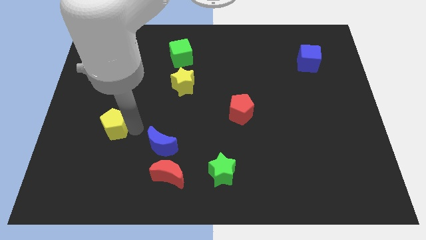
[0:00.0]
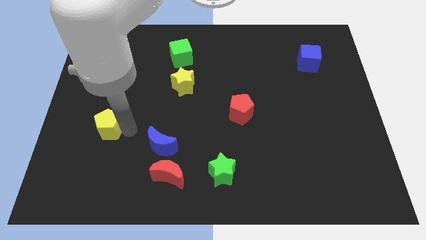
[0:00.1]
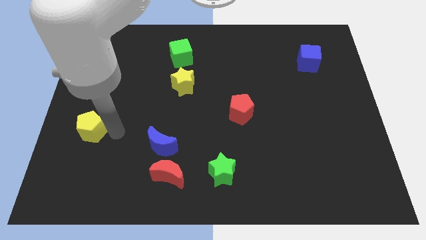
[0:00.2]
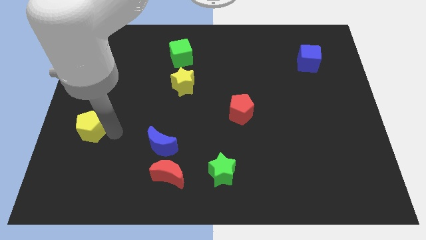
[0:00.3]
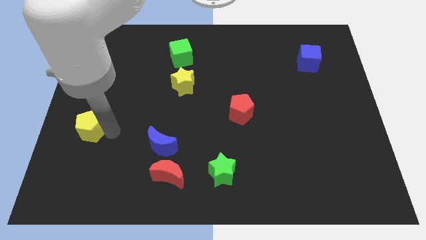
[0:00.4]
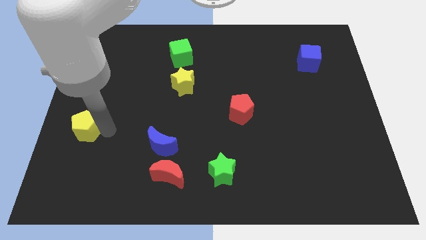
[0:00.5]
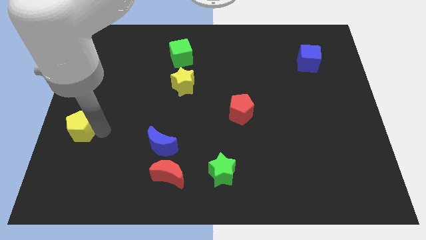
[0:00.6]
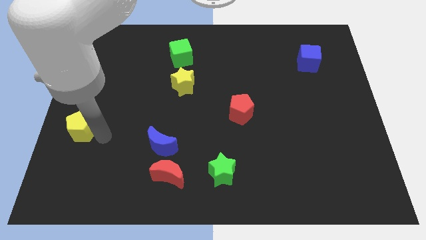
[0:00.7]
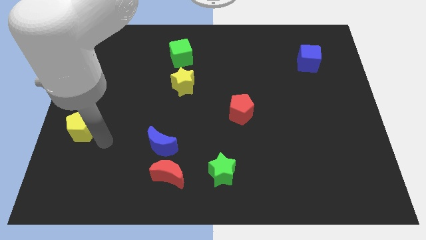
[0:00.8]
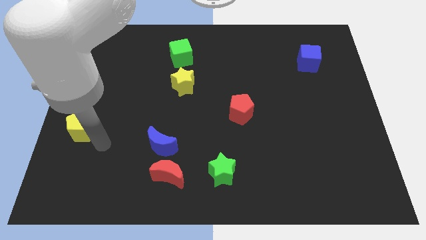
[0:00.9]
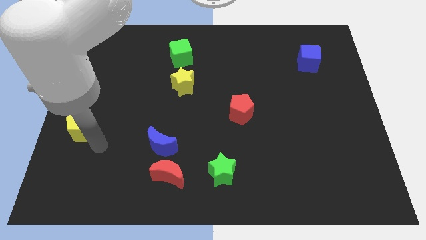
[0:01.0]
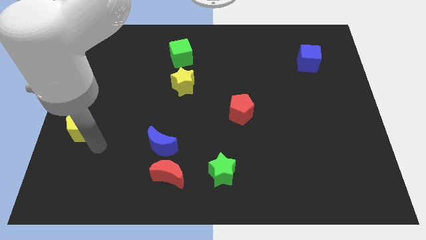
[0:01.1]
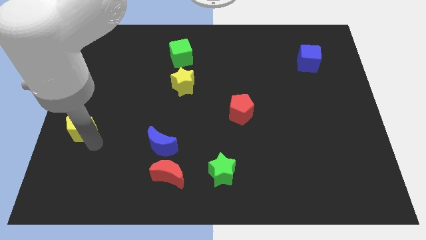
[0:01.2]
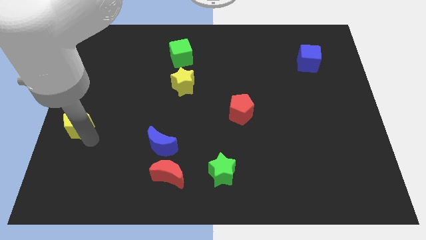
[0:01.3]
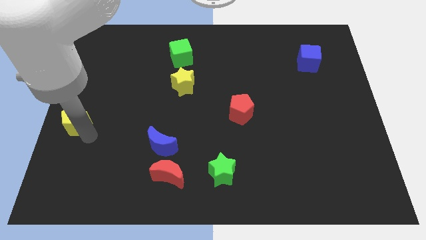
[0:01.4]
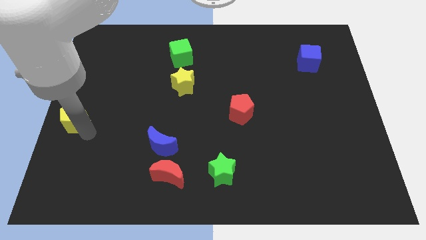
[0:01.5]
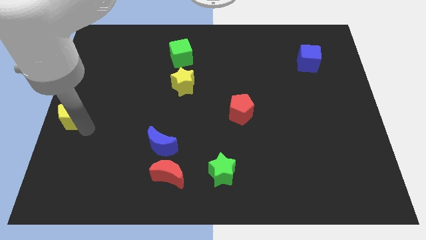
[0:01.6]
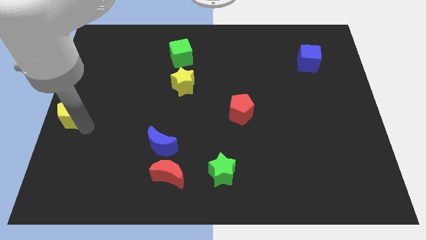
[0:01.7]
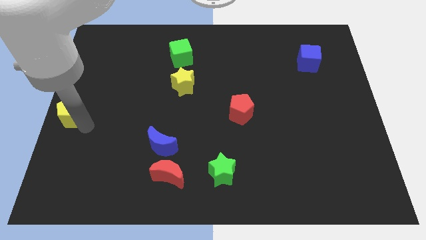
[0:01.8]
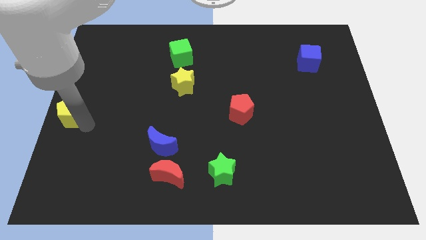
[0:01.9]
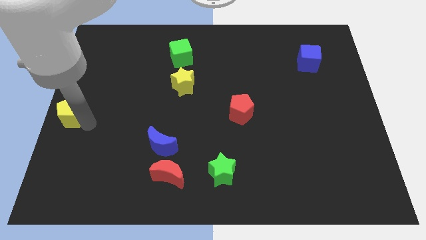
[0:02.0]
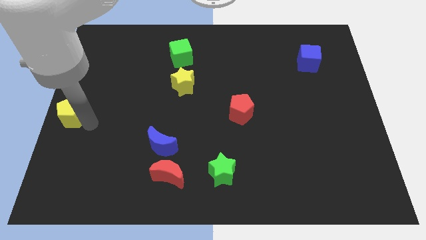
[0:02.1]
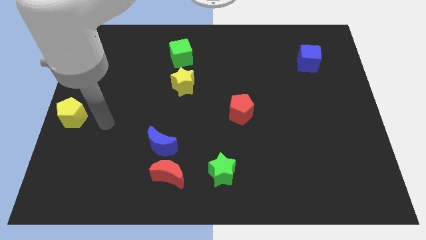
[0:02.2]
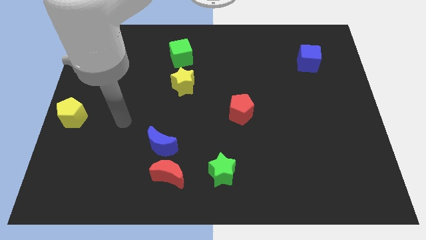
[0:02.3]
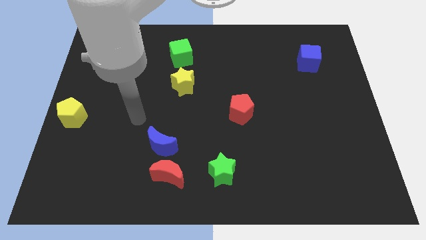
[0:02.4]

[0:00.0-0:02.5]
place the yellow pentagon to the left center

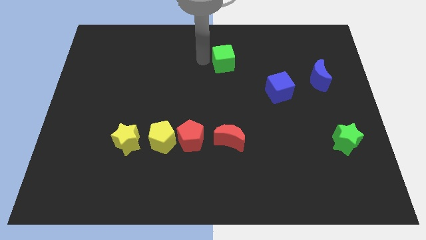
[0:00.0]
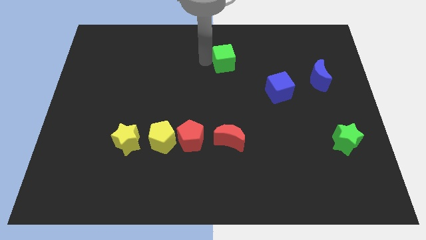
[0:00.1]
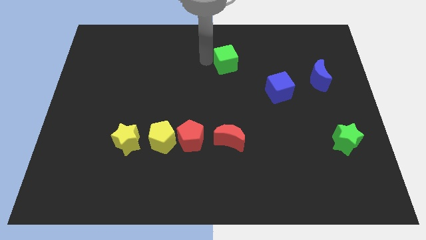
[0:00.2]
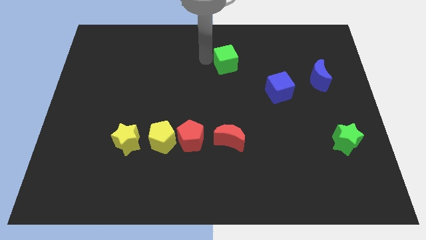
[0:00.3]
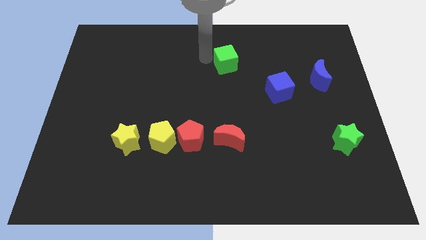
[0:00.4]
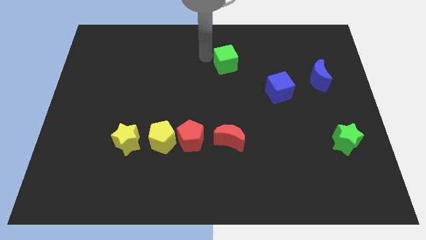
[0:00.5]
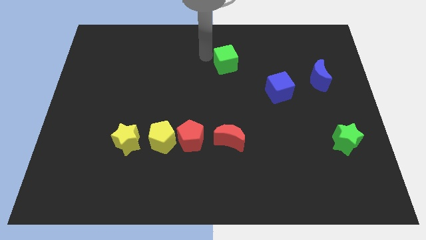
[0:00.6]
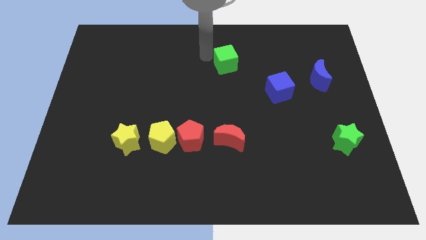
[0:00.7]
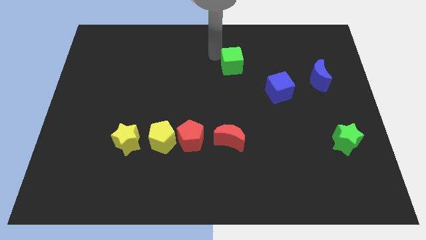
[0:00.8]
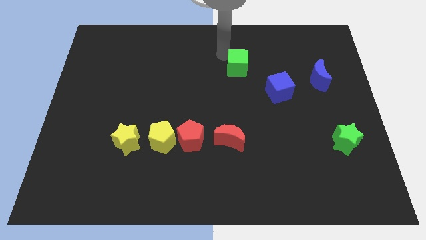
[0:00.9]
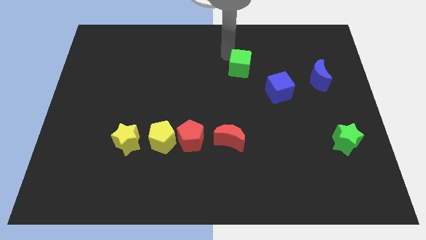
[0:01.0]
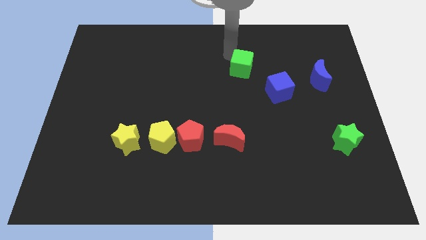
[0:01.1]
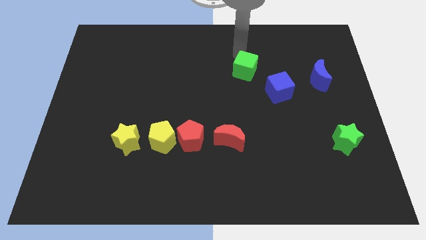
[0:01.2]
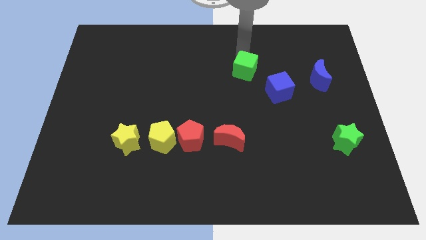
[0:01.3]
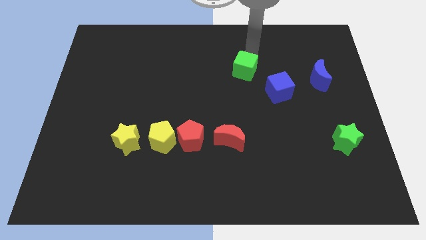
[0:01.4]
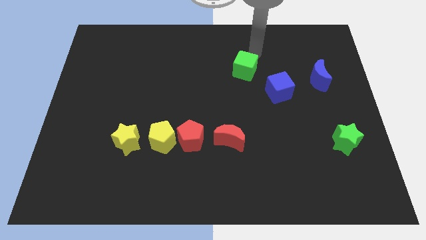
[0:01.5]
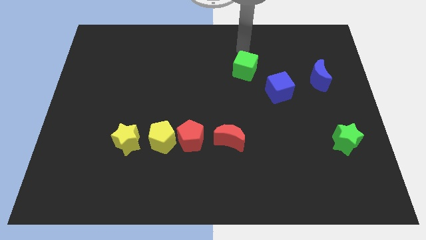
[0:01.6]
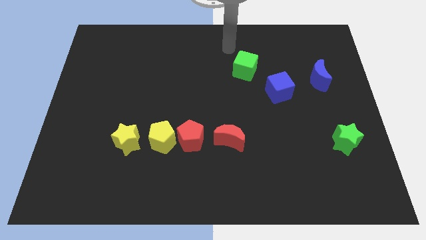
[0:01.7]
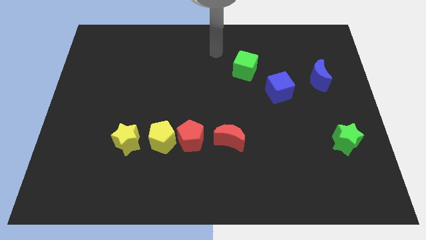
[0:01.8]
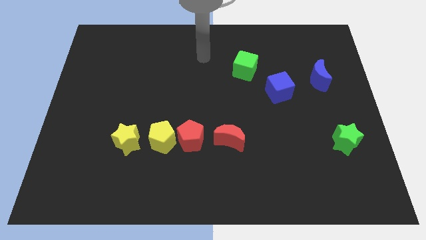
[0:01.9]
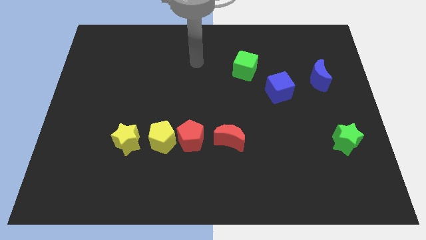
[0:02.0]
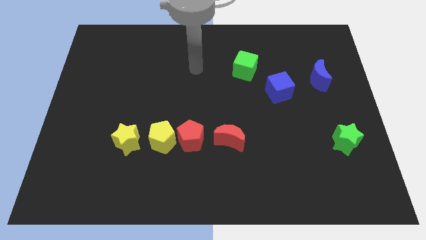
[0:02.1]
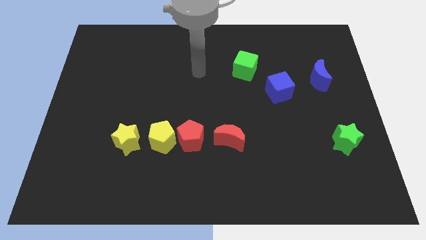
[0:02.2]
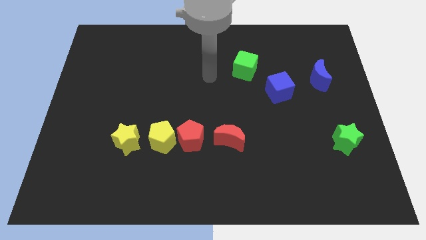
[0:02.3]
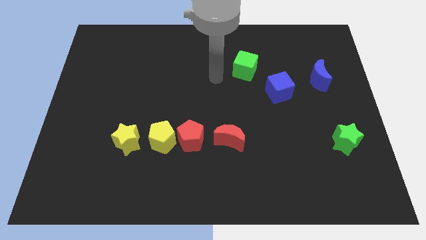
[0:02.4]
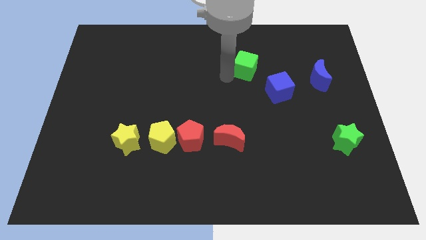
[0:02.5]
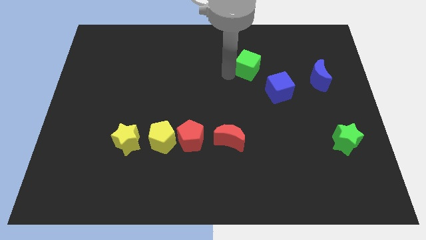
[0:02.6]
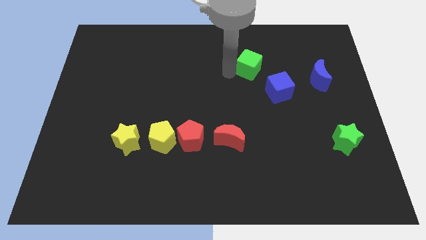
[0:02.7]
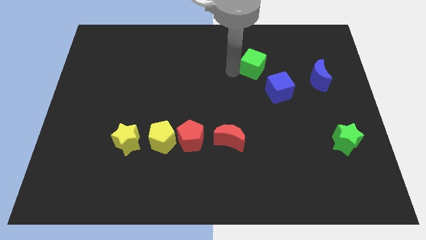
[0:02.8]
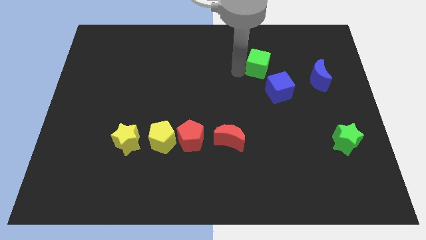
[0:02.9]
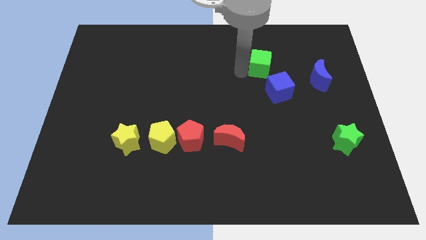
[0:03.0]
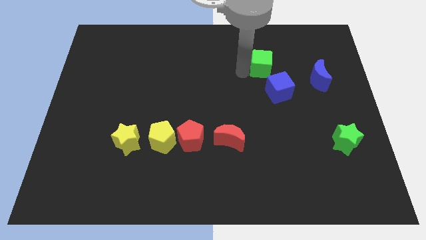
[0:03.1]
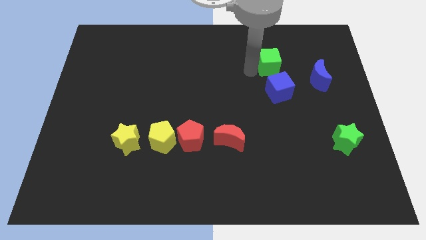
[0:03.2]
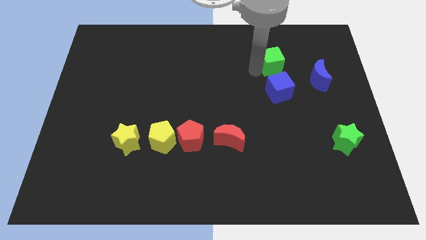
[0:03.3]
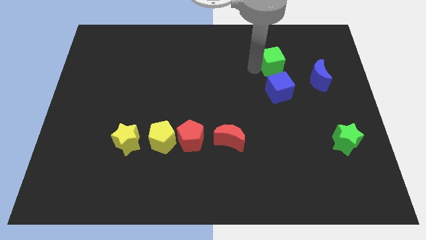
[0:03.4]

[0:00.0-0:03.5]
place the green cube towards the top side of the blue cube

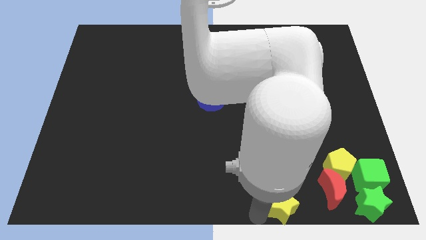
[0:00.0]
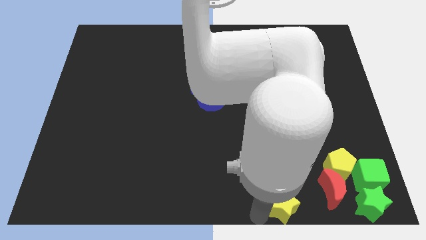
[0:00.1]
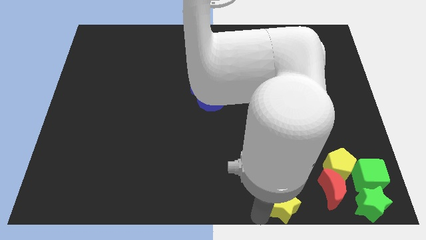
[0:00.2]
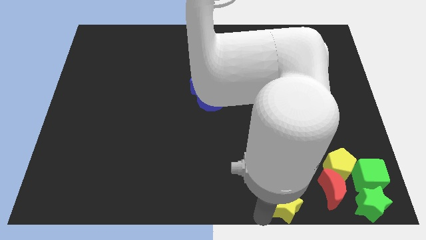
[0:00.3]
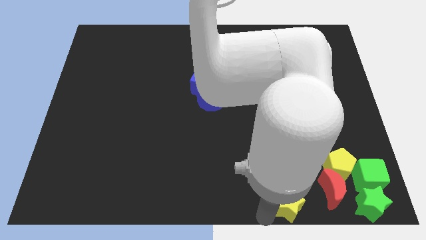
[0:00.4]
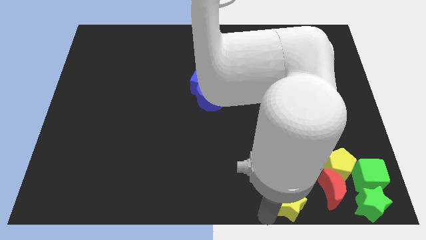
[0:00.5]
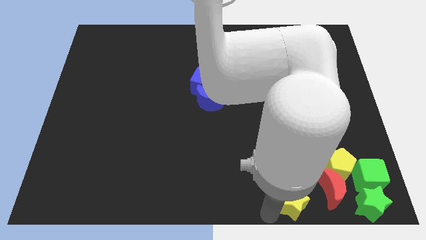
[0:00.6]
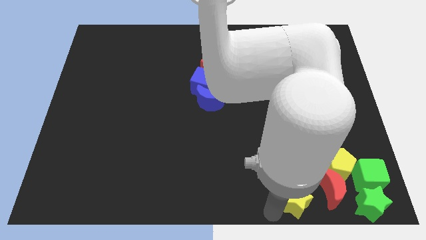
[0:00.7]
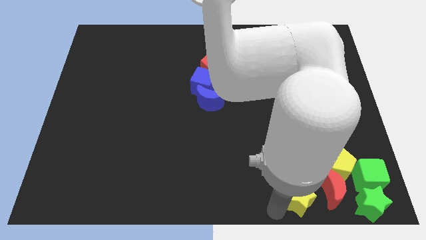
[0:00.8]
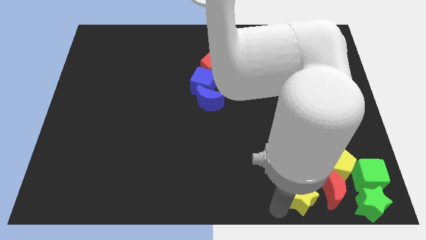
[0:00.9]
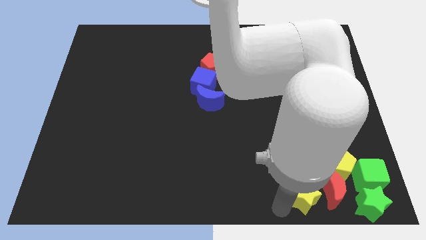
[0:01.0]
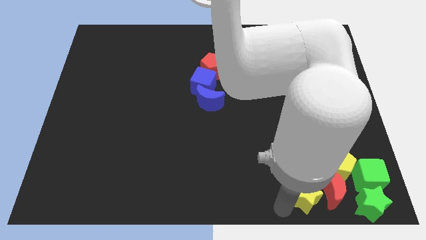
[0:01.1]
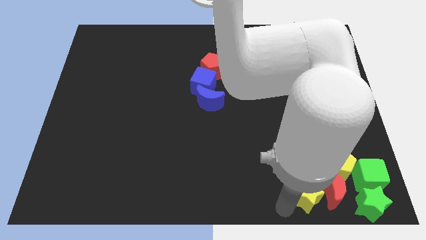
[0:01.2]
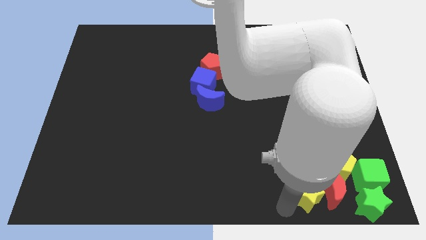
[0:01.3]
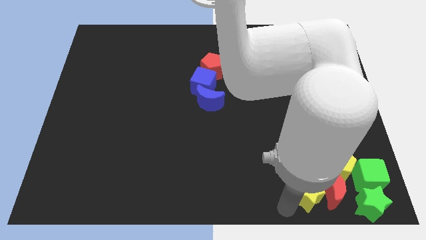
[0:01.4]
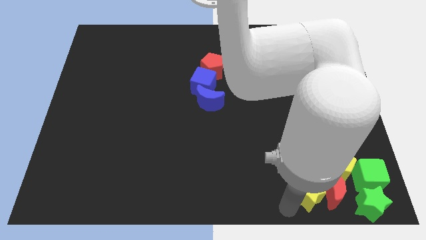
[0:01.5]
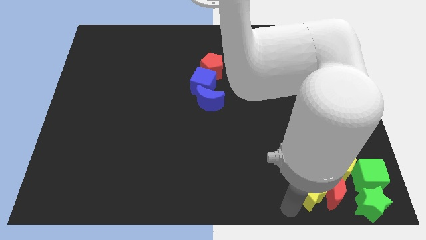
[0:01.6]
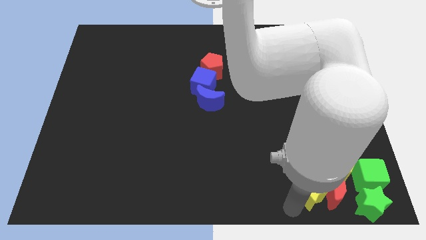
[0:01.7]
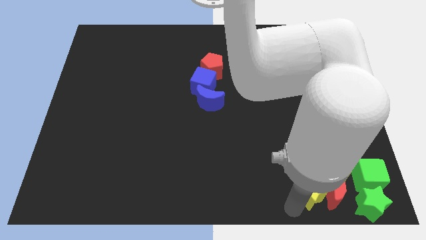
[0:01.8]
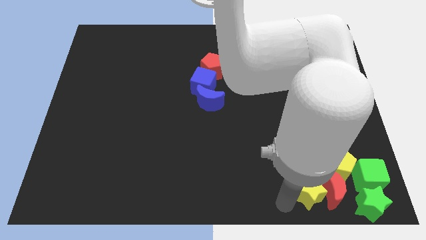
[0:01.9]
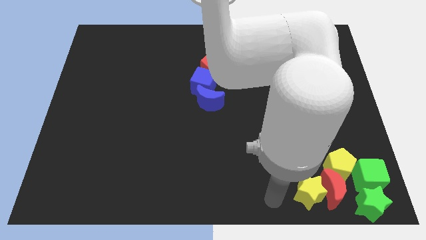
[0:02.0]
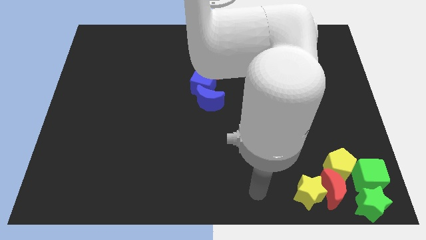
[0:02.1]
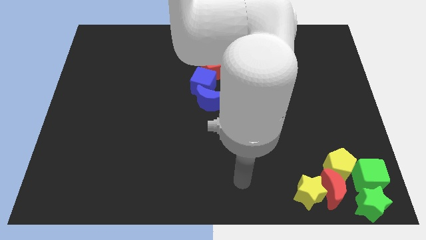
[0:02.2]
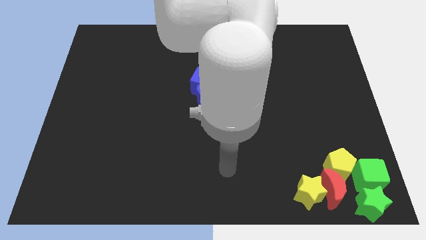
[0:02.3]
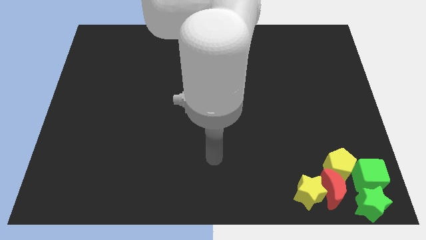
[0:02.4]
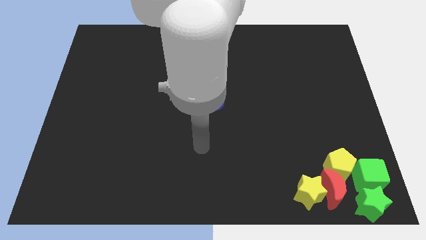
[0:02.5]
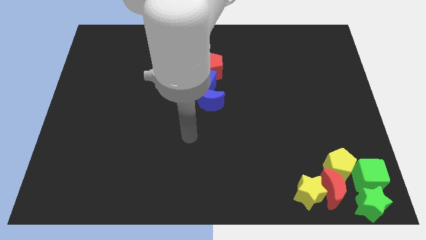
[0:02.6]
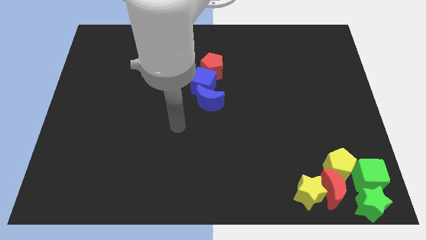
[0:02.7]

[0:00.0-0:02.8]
drag yellow star into group of blocks
